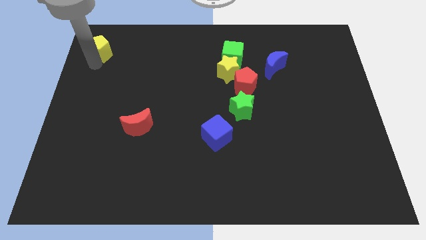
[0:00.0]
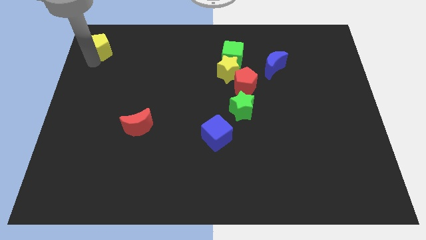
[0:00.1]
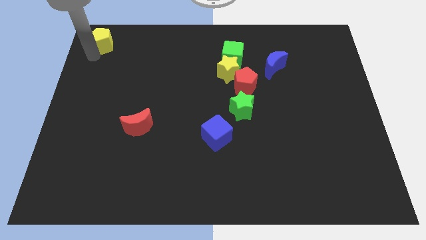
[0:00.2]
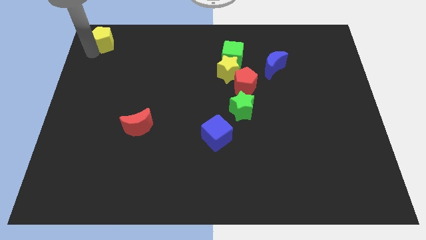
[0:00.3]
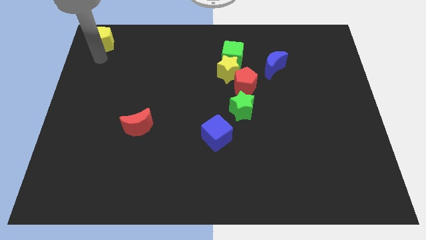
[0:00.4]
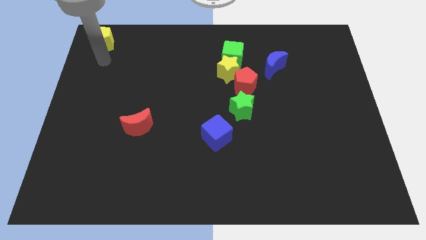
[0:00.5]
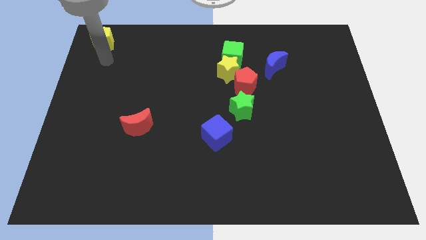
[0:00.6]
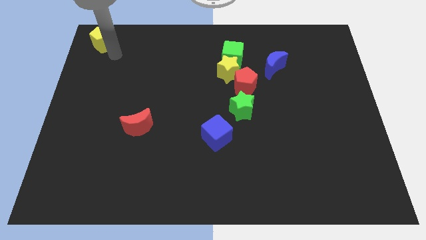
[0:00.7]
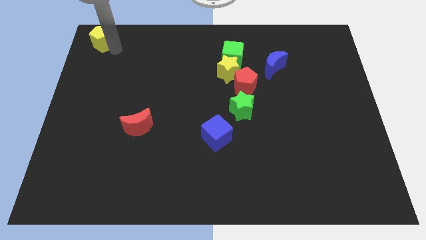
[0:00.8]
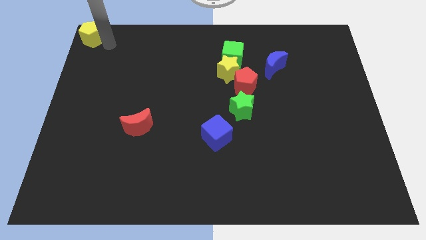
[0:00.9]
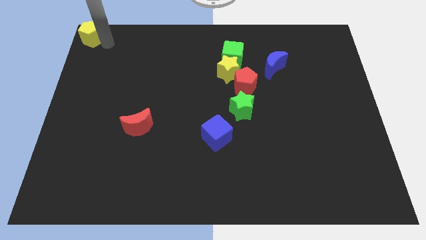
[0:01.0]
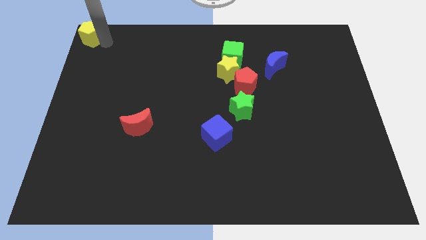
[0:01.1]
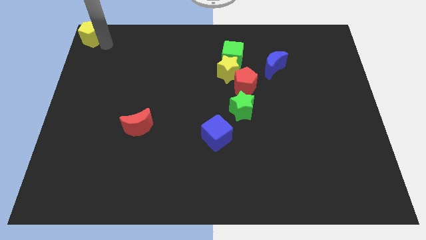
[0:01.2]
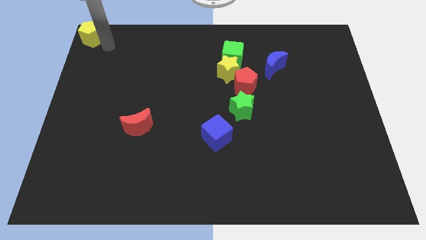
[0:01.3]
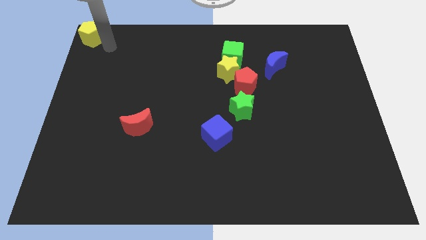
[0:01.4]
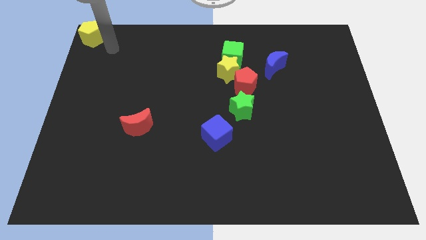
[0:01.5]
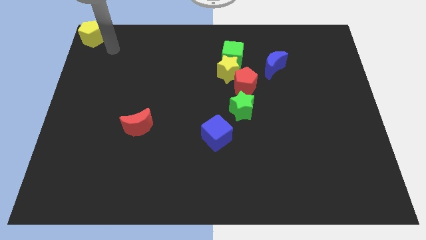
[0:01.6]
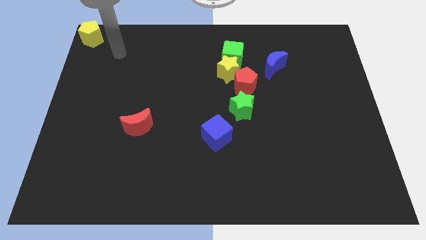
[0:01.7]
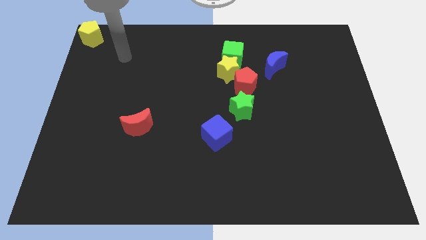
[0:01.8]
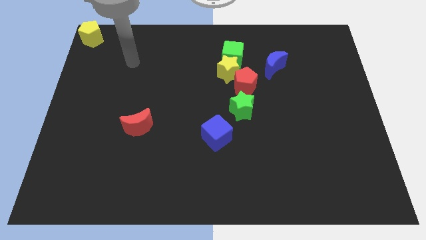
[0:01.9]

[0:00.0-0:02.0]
move the yellow pentagon to the top left

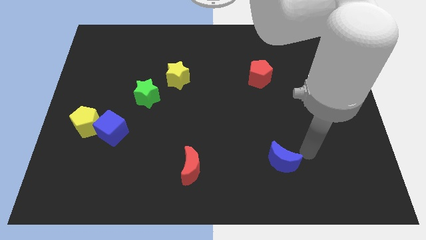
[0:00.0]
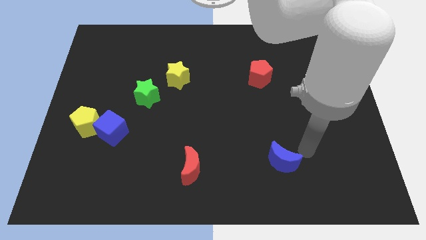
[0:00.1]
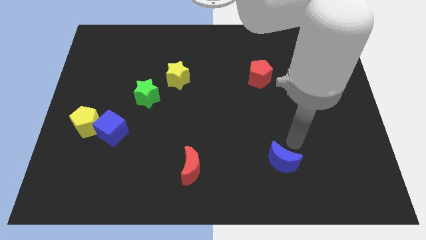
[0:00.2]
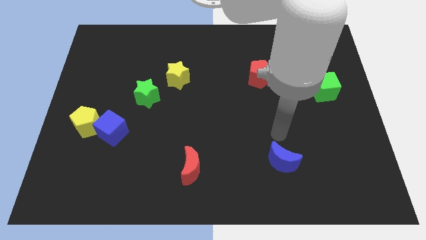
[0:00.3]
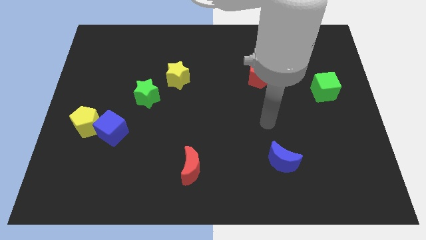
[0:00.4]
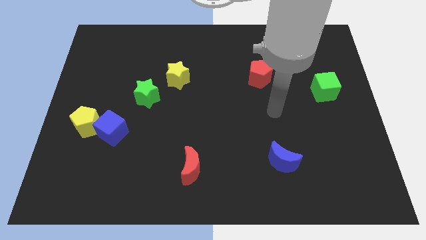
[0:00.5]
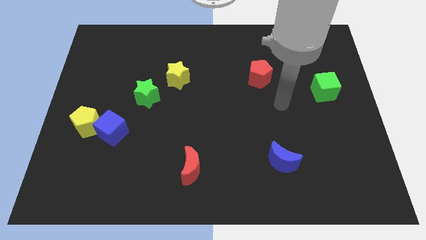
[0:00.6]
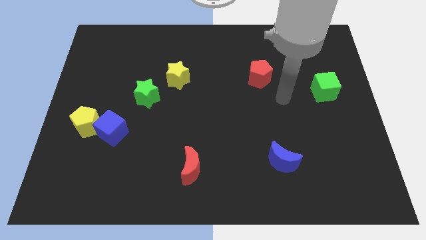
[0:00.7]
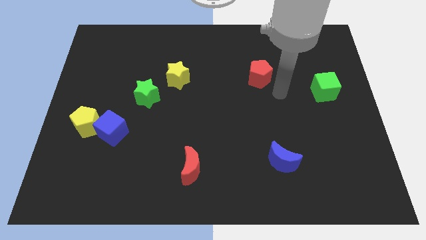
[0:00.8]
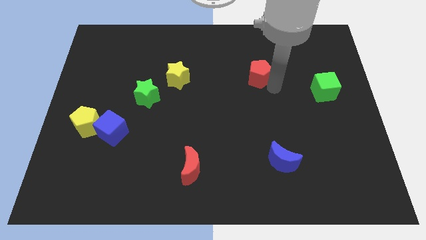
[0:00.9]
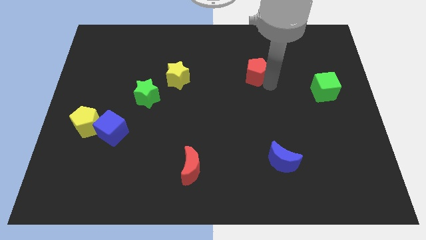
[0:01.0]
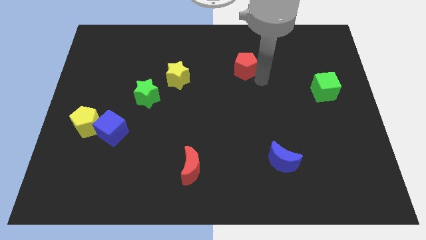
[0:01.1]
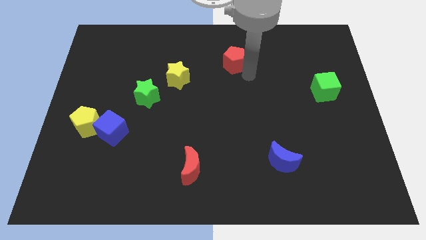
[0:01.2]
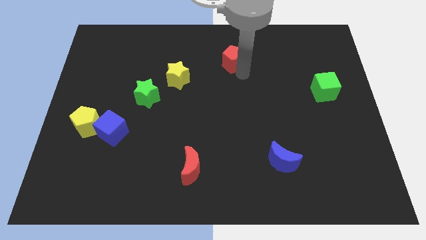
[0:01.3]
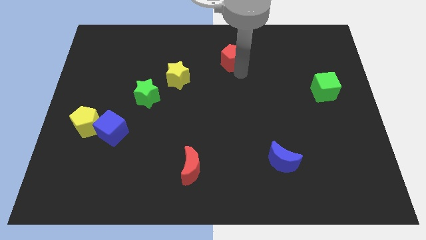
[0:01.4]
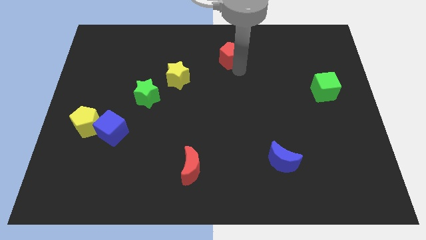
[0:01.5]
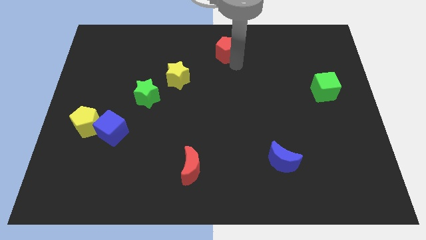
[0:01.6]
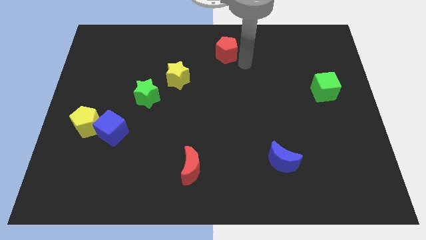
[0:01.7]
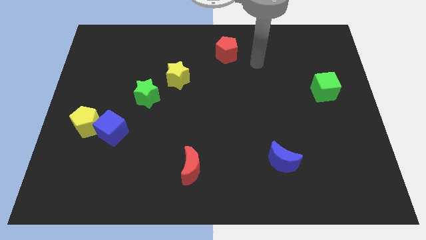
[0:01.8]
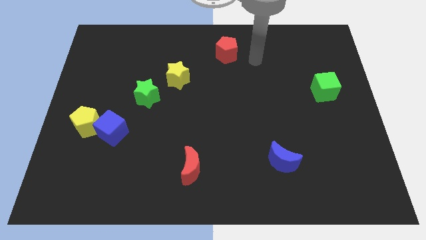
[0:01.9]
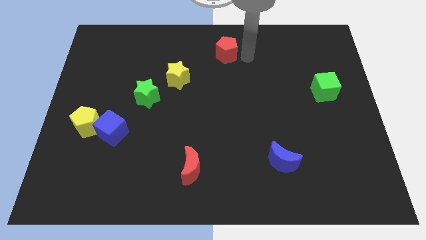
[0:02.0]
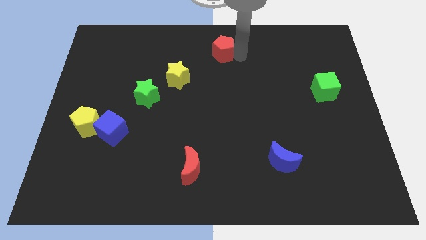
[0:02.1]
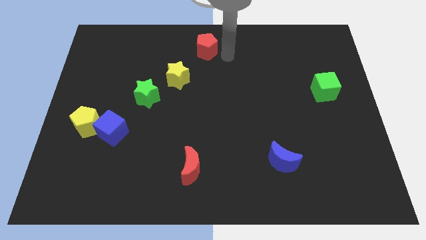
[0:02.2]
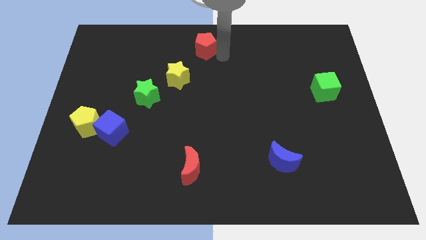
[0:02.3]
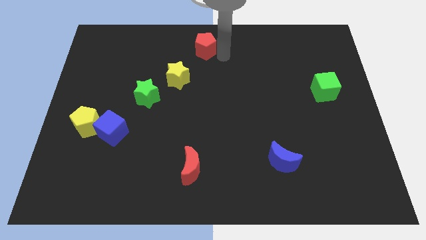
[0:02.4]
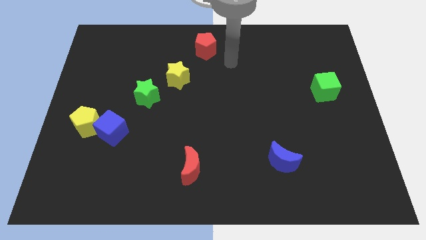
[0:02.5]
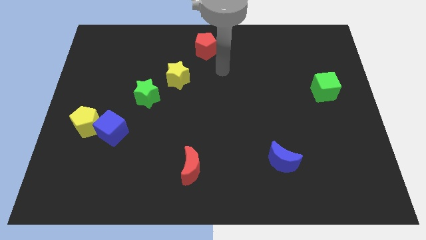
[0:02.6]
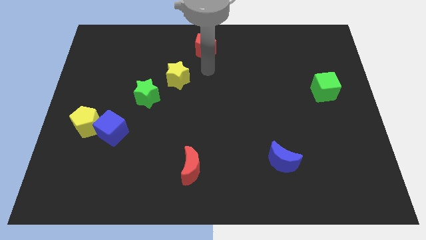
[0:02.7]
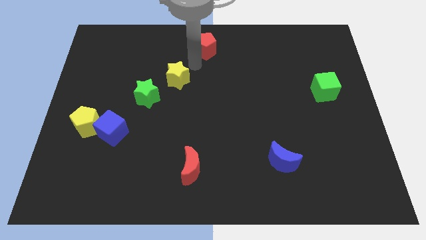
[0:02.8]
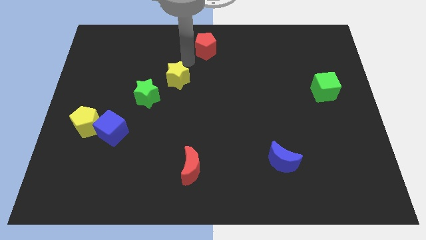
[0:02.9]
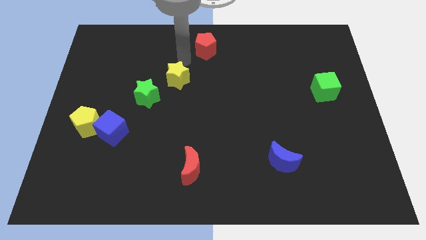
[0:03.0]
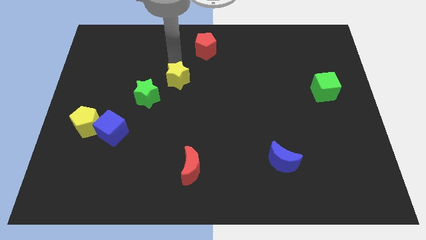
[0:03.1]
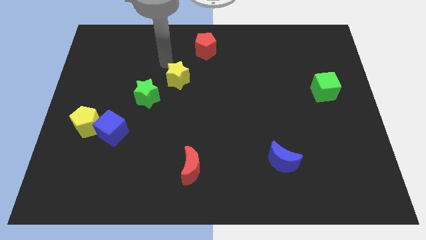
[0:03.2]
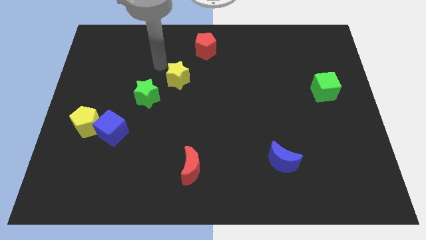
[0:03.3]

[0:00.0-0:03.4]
slide the red pentagon to the top center

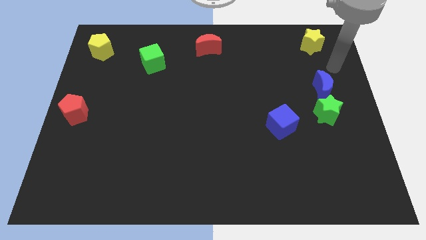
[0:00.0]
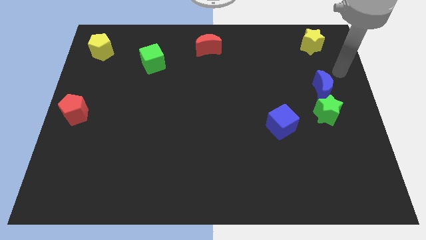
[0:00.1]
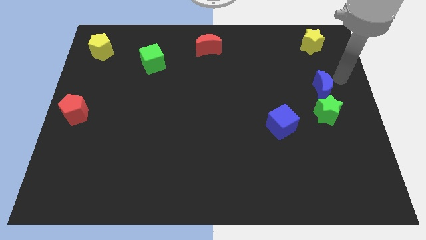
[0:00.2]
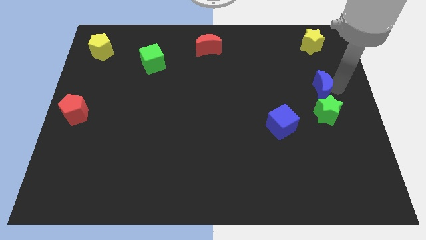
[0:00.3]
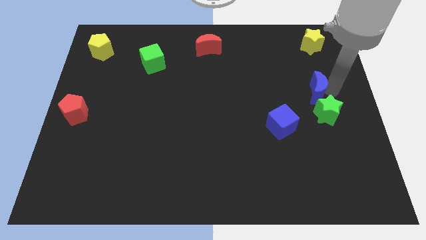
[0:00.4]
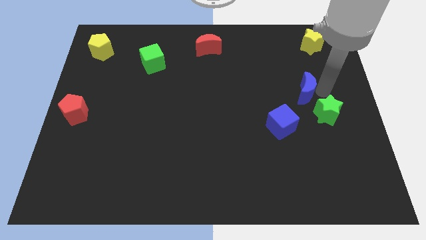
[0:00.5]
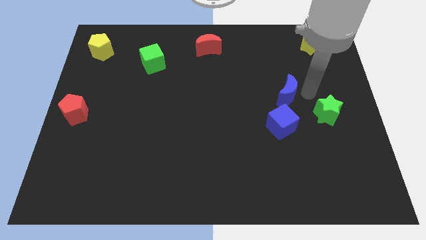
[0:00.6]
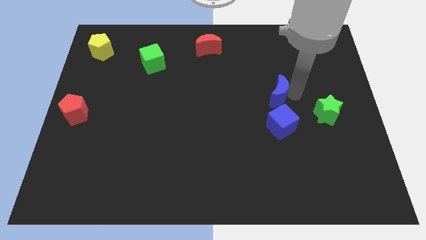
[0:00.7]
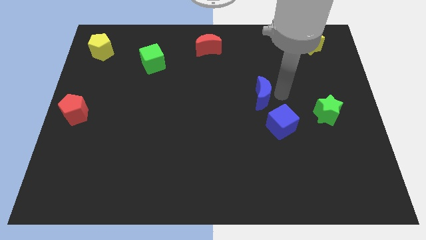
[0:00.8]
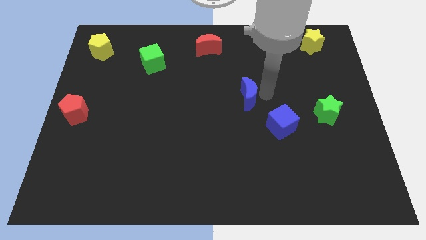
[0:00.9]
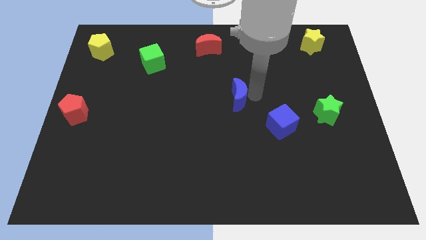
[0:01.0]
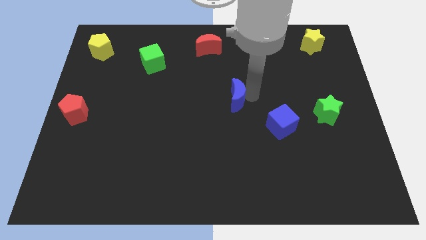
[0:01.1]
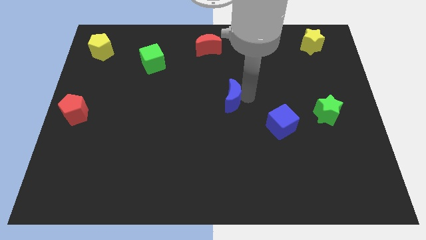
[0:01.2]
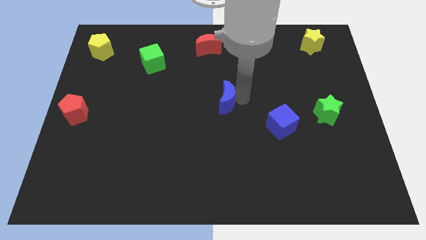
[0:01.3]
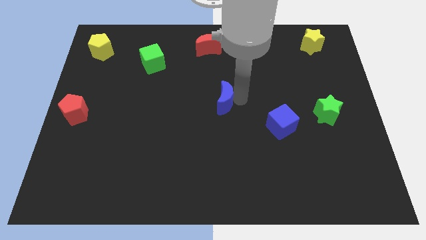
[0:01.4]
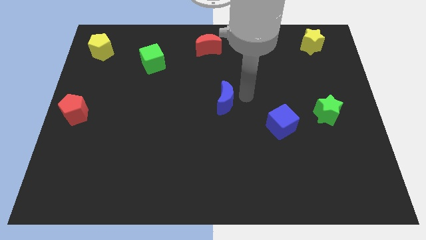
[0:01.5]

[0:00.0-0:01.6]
place the blue crescent at the center of the board

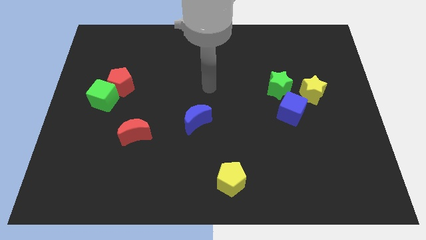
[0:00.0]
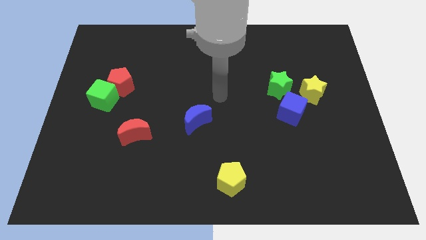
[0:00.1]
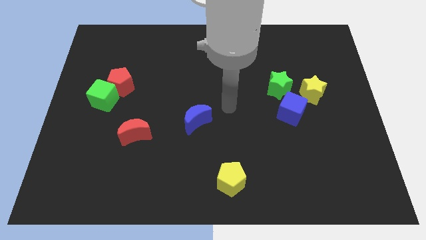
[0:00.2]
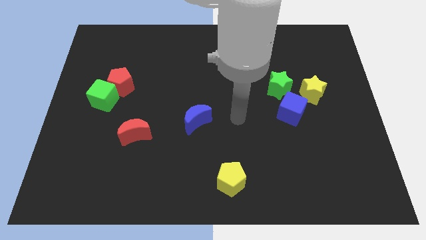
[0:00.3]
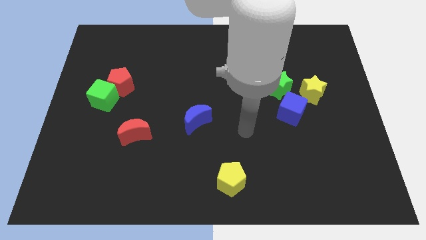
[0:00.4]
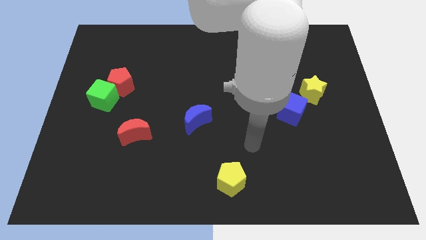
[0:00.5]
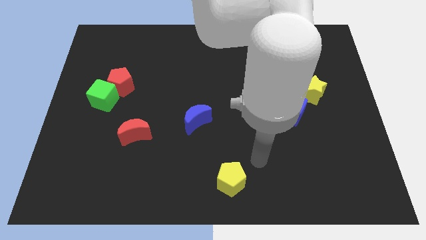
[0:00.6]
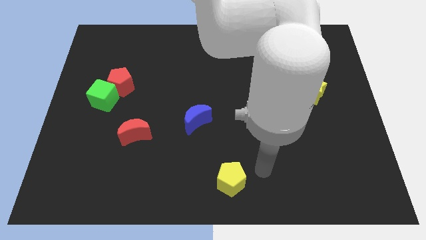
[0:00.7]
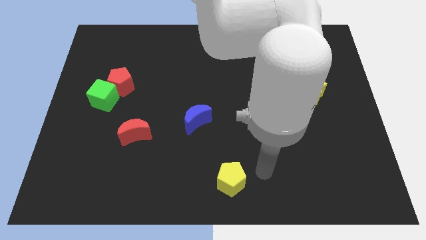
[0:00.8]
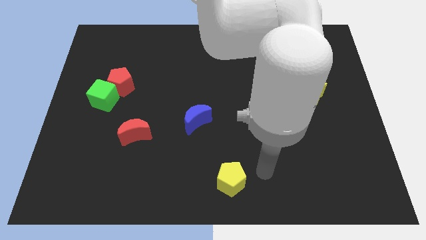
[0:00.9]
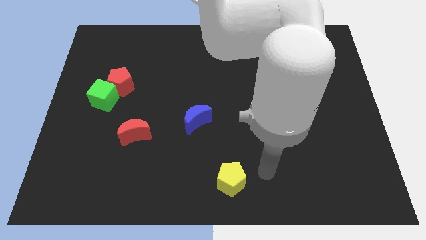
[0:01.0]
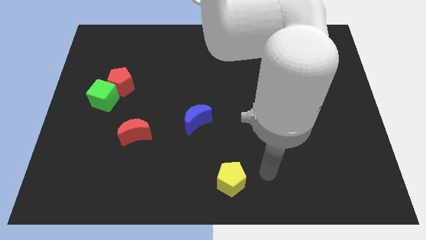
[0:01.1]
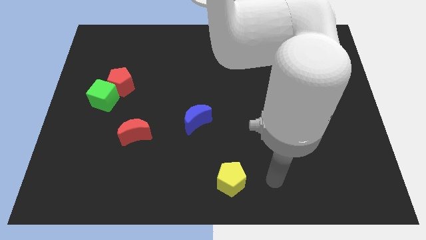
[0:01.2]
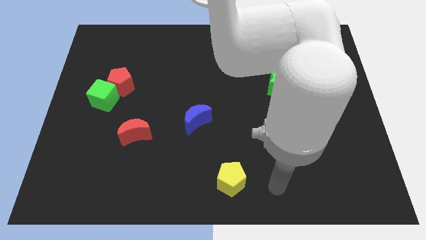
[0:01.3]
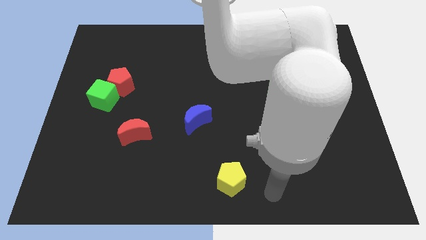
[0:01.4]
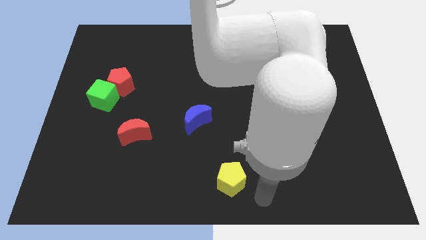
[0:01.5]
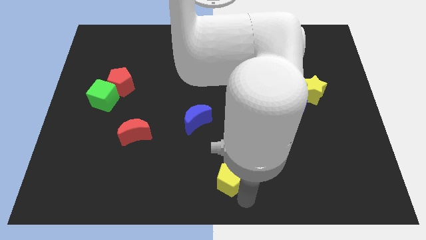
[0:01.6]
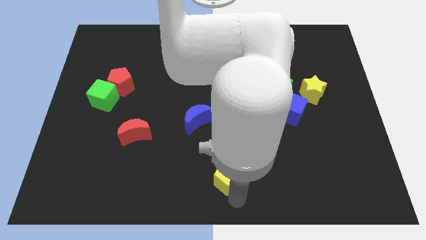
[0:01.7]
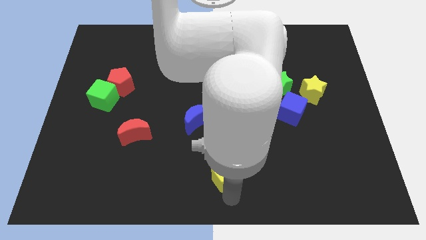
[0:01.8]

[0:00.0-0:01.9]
move the arm to the bottom of the yellow pentagon

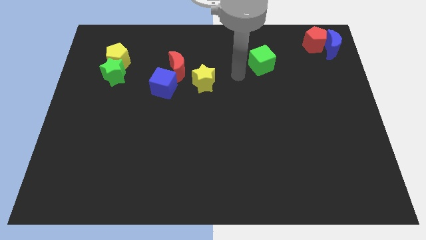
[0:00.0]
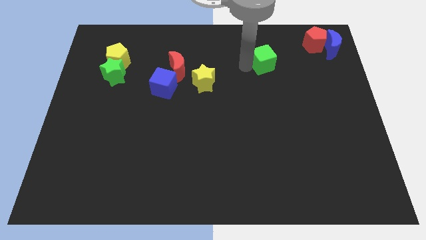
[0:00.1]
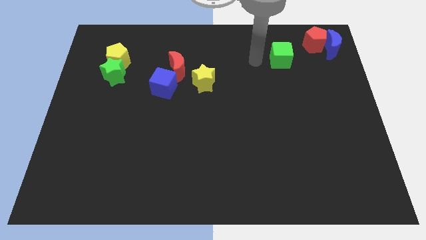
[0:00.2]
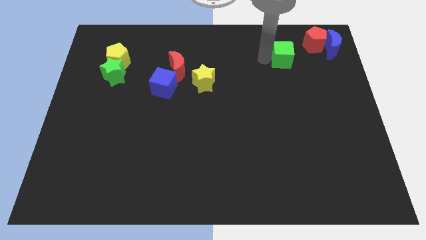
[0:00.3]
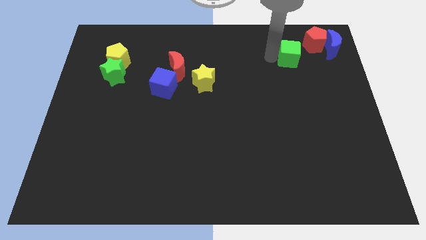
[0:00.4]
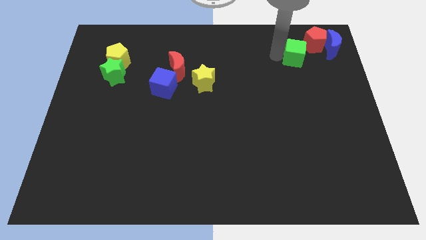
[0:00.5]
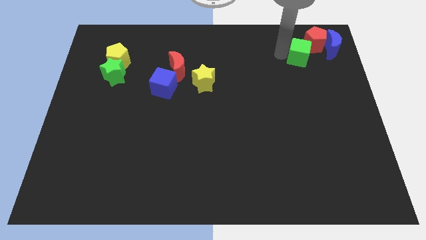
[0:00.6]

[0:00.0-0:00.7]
push the green block to the left of the red and blue block
